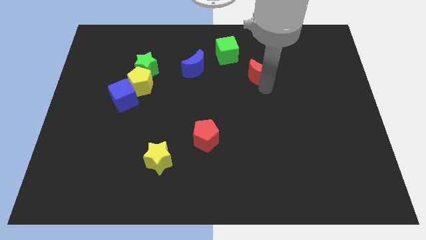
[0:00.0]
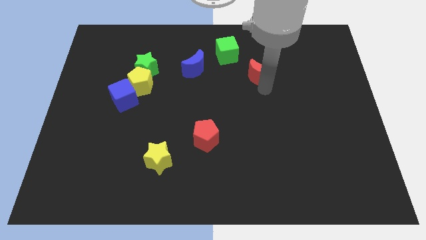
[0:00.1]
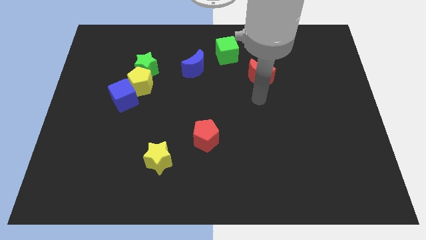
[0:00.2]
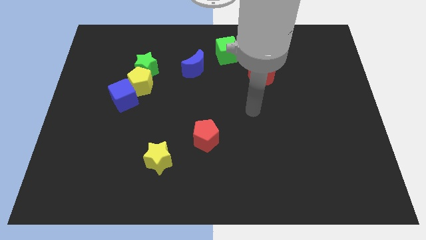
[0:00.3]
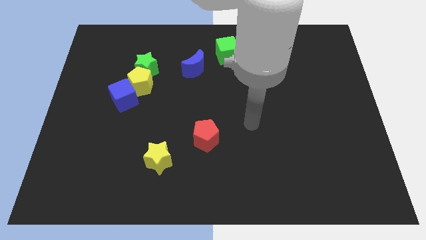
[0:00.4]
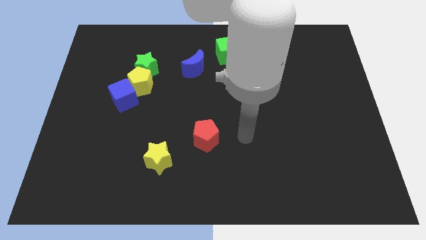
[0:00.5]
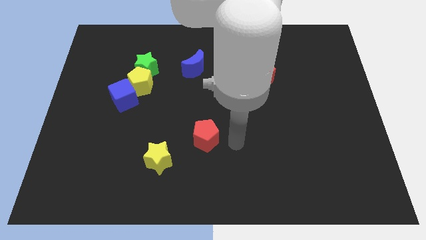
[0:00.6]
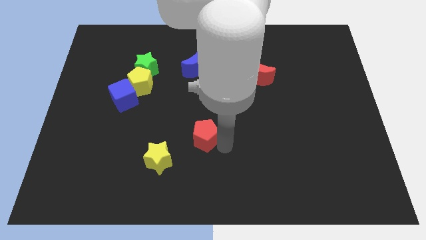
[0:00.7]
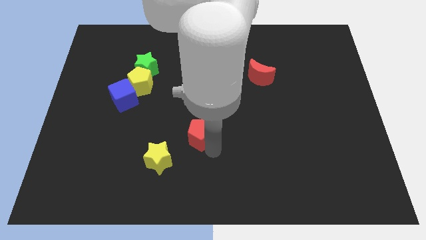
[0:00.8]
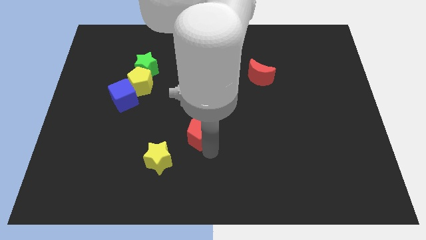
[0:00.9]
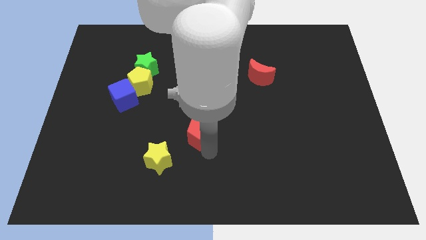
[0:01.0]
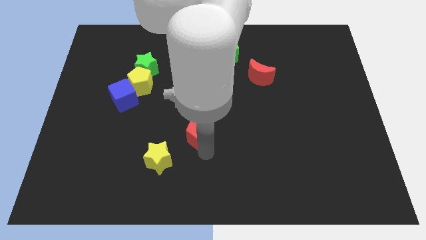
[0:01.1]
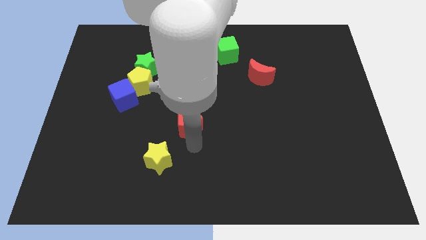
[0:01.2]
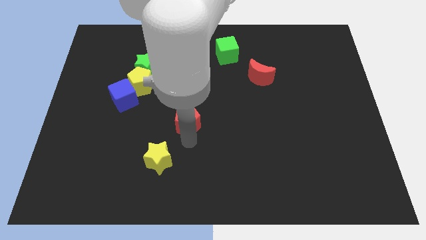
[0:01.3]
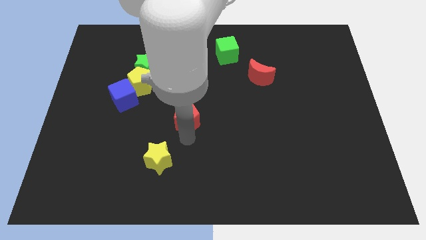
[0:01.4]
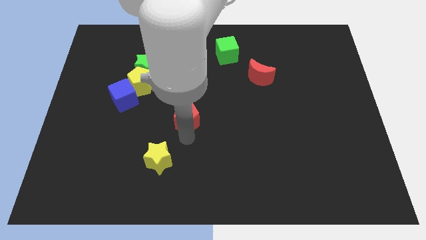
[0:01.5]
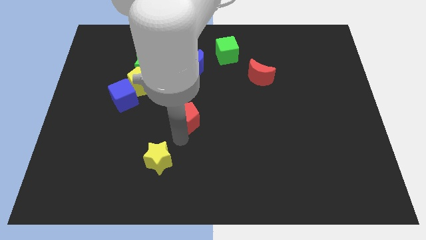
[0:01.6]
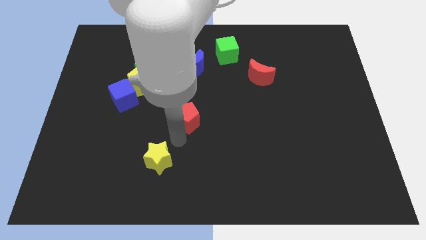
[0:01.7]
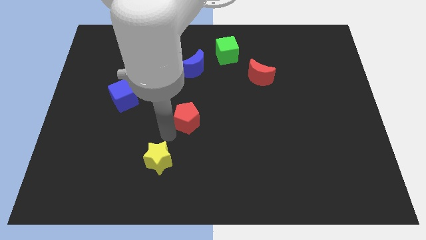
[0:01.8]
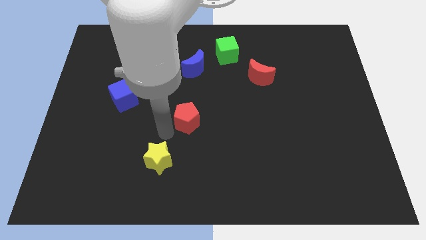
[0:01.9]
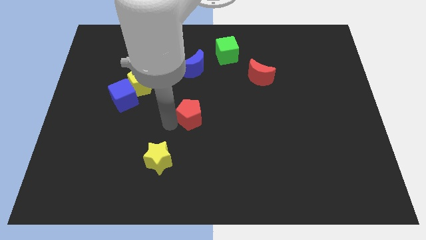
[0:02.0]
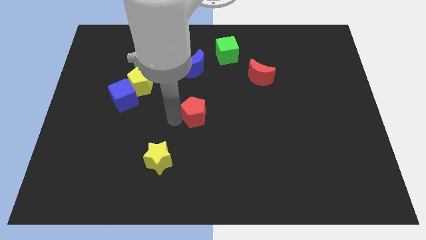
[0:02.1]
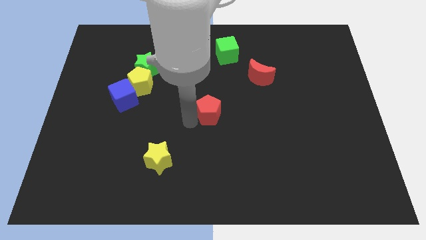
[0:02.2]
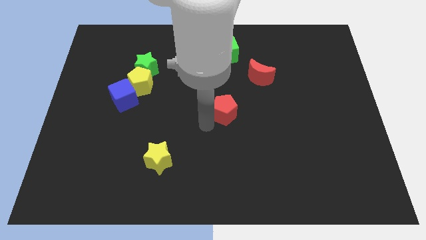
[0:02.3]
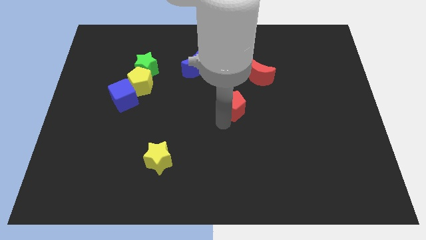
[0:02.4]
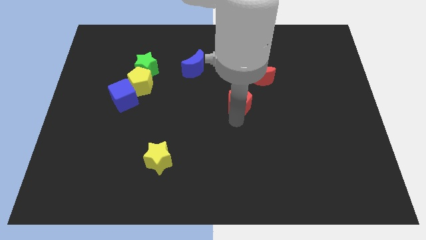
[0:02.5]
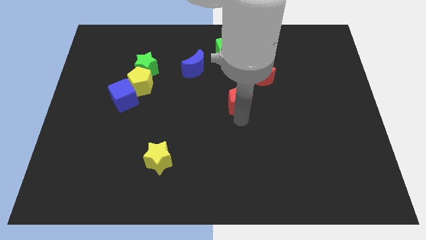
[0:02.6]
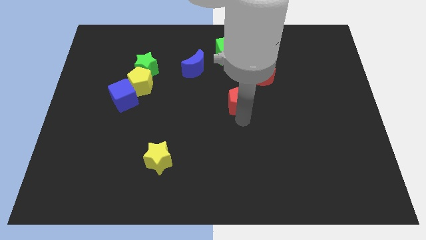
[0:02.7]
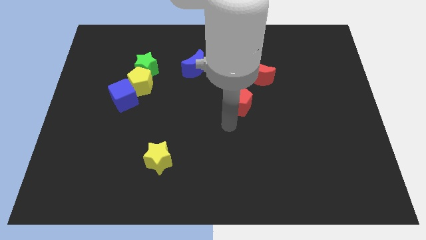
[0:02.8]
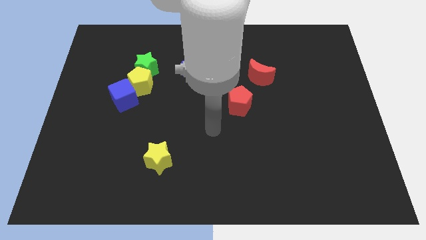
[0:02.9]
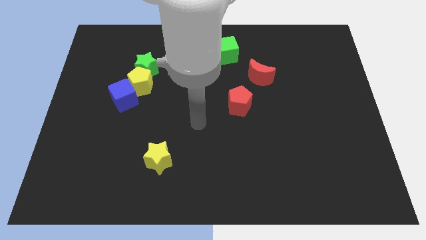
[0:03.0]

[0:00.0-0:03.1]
place red pentagon to the vertical bottom side of green cube

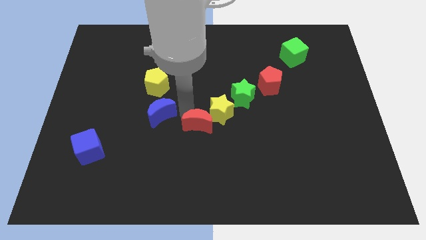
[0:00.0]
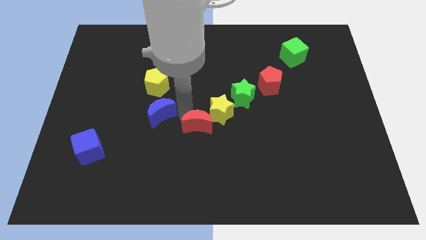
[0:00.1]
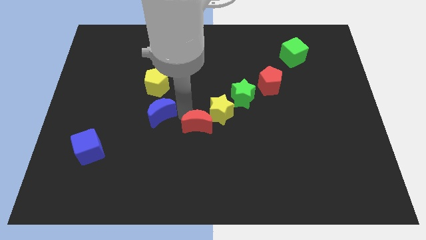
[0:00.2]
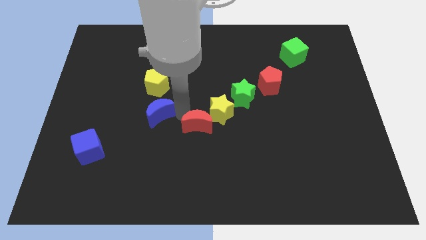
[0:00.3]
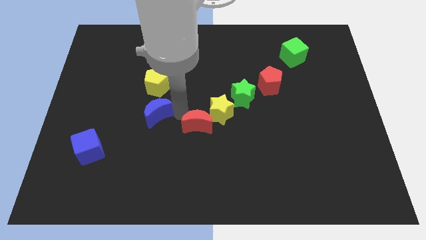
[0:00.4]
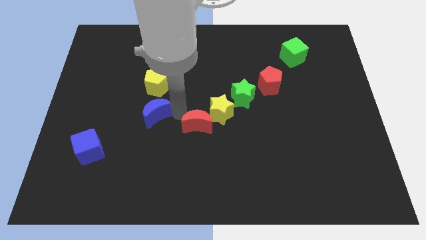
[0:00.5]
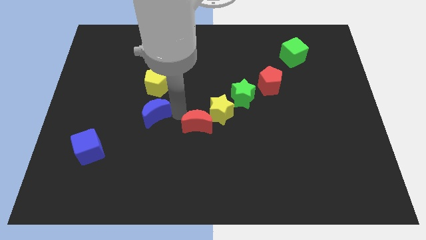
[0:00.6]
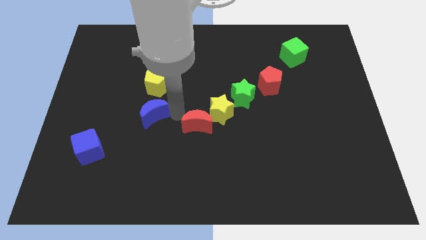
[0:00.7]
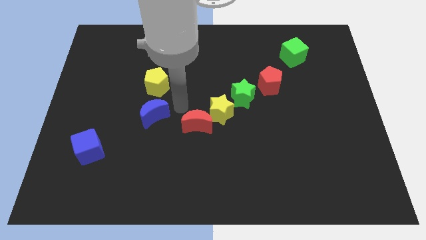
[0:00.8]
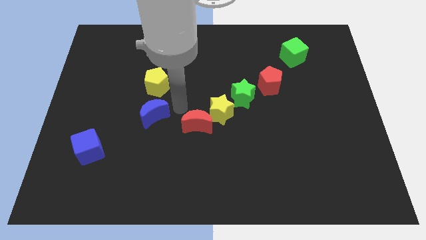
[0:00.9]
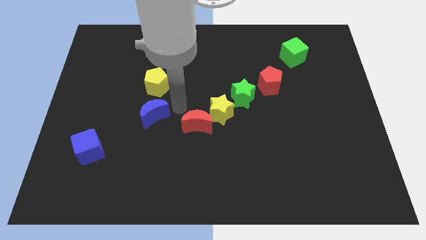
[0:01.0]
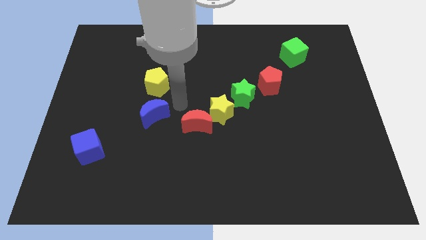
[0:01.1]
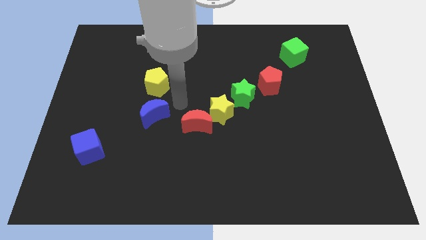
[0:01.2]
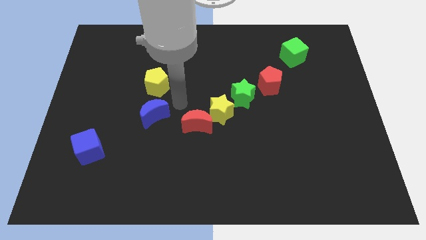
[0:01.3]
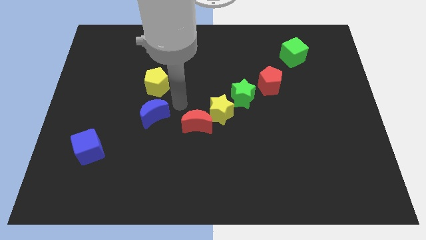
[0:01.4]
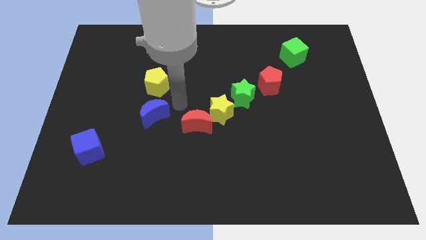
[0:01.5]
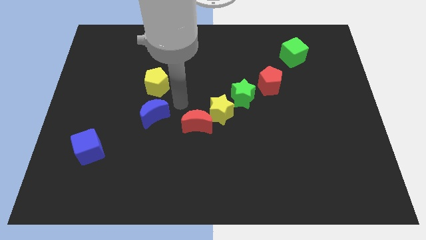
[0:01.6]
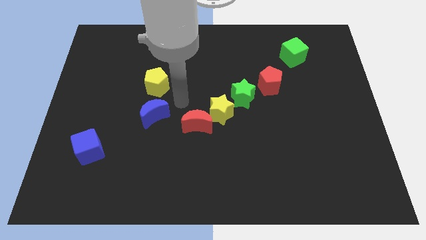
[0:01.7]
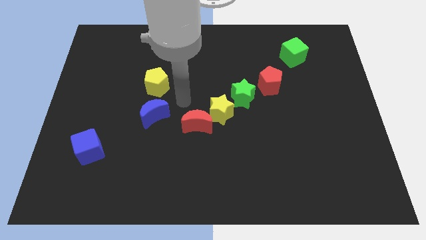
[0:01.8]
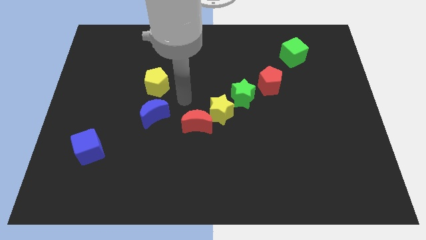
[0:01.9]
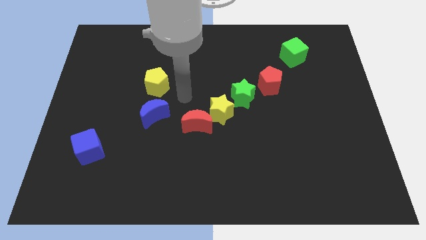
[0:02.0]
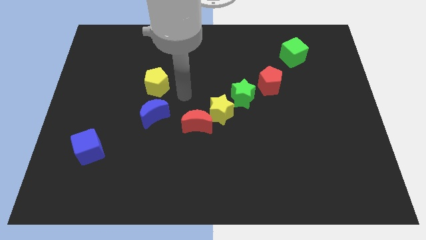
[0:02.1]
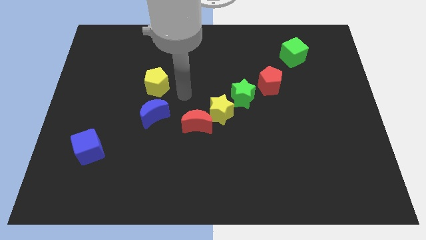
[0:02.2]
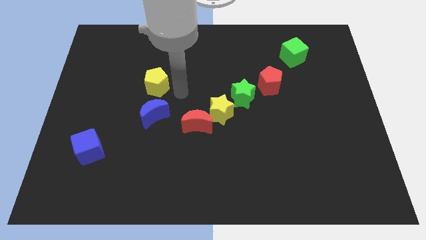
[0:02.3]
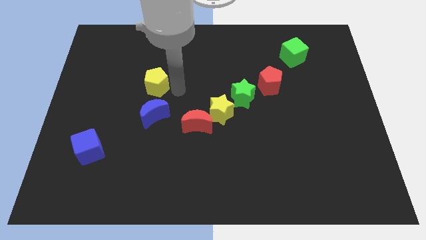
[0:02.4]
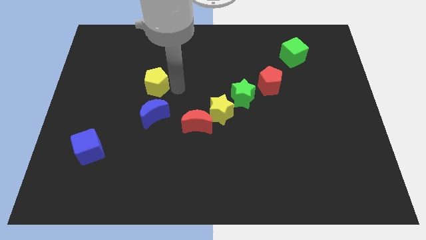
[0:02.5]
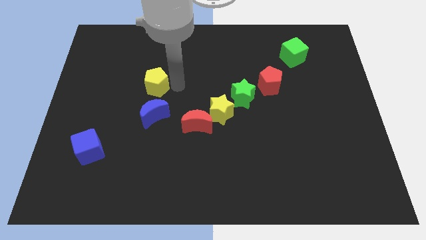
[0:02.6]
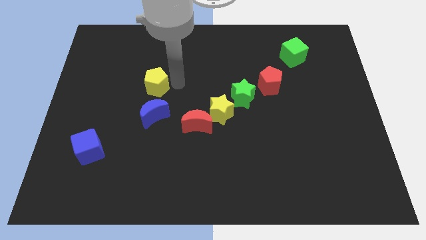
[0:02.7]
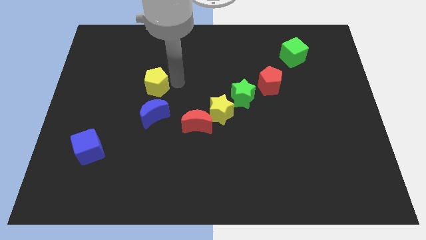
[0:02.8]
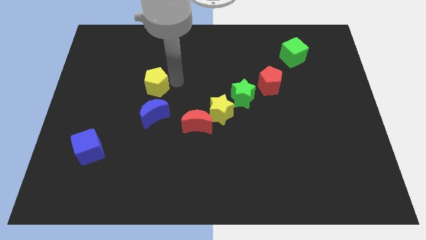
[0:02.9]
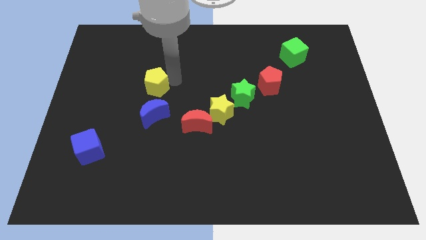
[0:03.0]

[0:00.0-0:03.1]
place the blue crescent underneath the yellow pentagon

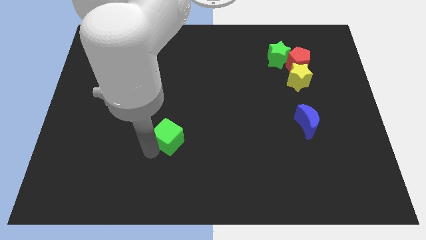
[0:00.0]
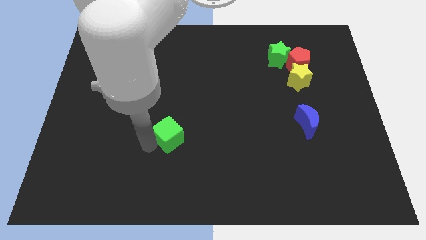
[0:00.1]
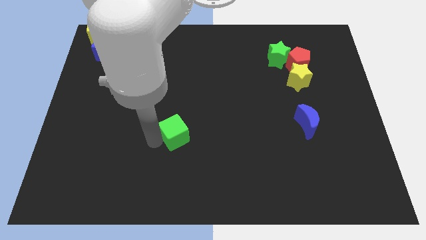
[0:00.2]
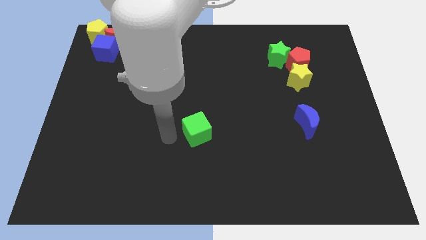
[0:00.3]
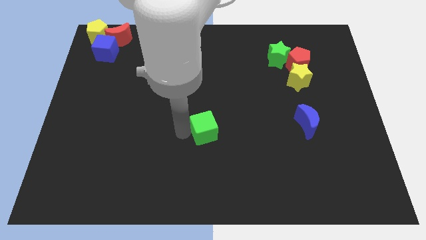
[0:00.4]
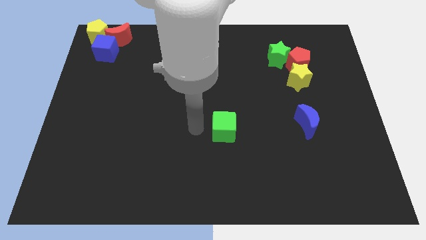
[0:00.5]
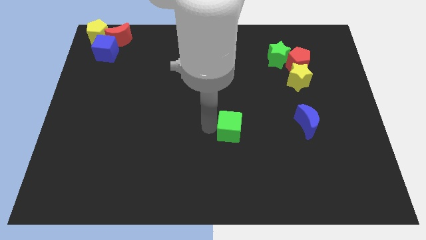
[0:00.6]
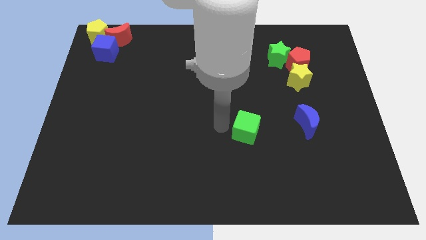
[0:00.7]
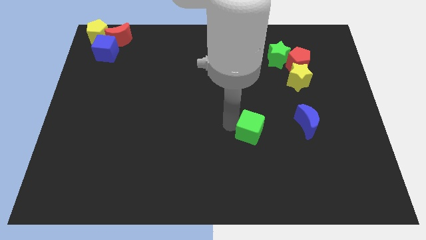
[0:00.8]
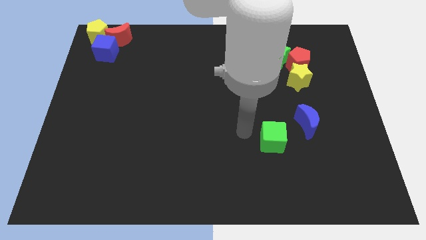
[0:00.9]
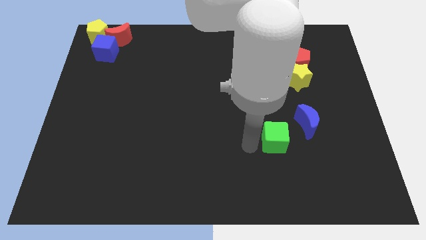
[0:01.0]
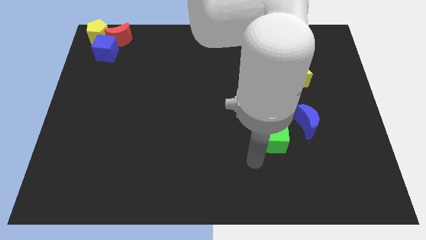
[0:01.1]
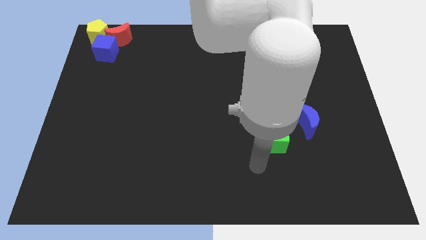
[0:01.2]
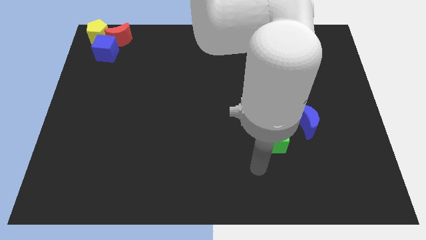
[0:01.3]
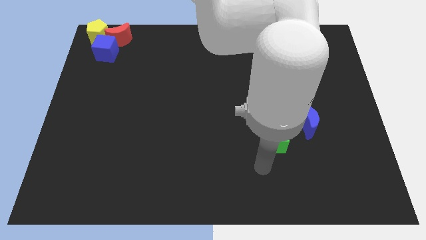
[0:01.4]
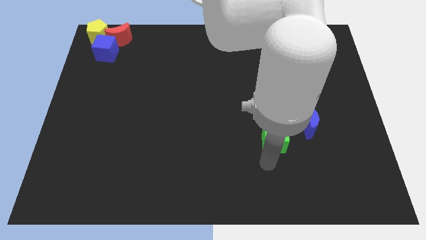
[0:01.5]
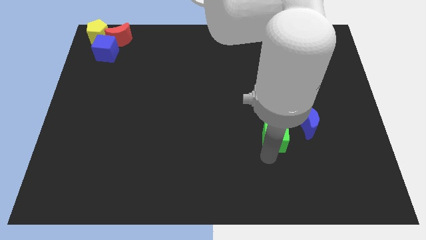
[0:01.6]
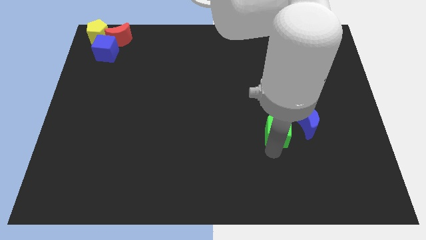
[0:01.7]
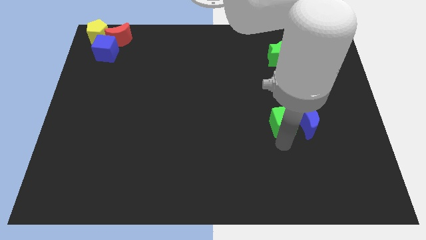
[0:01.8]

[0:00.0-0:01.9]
put the green cube to the left side of the blue crescent

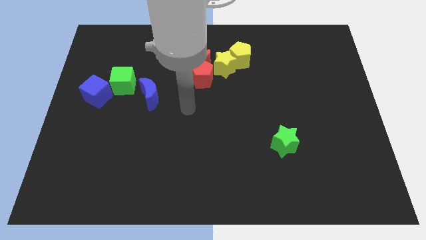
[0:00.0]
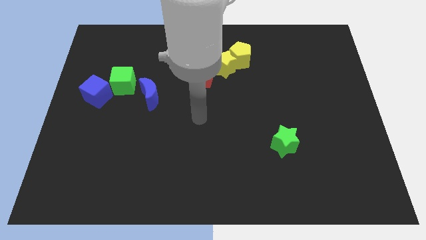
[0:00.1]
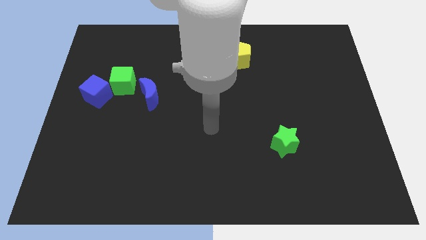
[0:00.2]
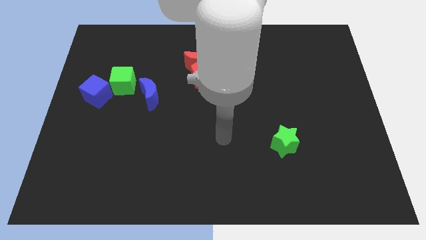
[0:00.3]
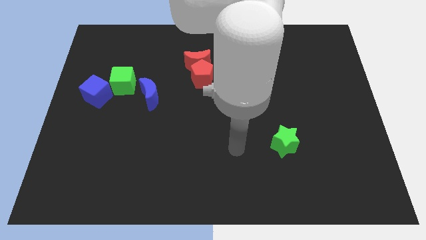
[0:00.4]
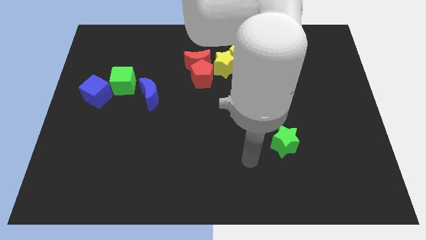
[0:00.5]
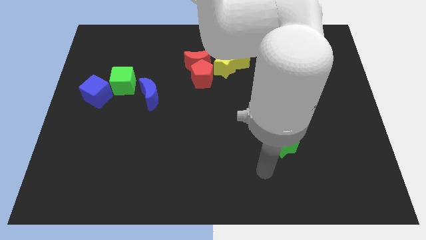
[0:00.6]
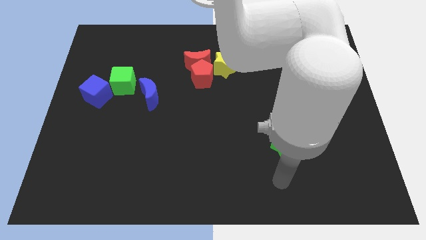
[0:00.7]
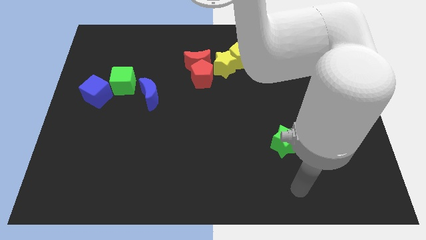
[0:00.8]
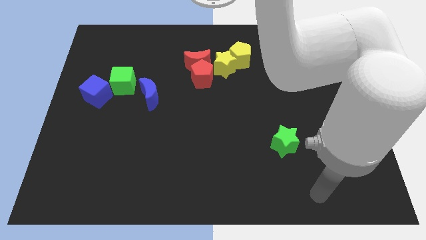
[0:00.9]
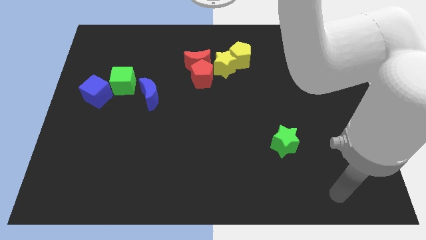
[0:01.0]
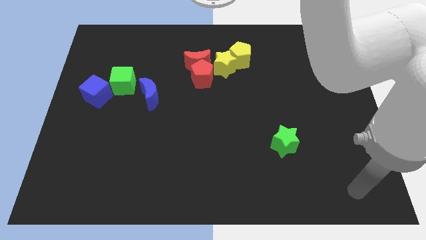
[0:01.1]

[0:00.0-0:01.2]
move your arm towards the bottom right corner of the board
